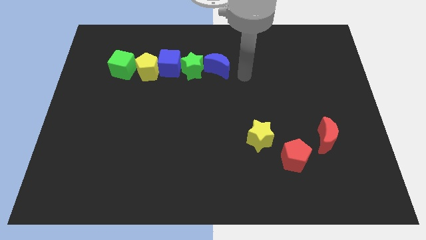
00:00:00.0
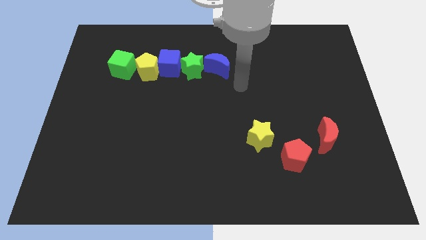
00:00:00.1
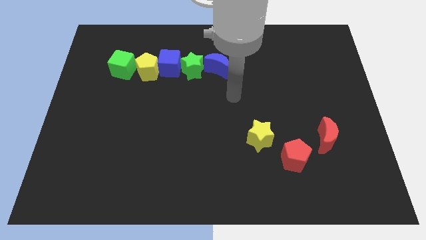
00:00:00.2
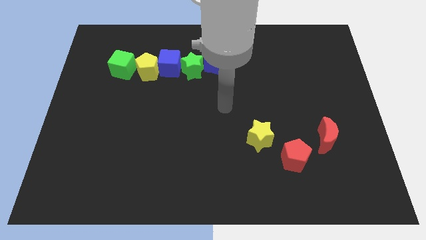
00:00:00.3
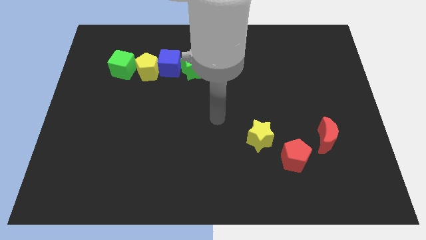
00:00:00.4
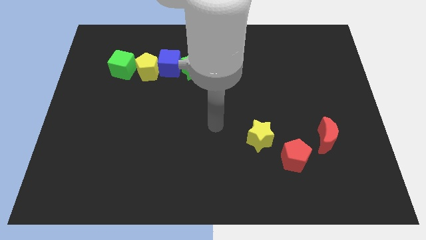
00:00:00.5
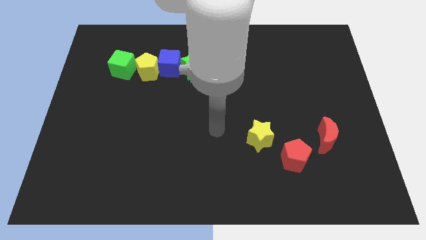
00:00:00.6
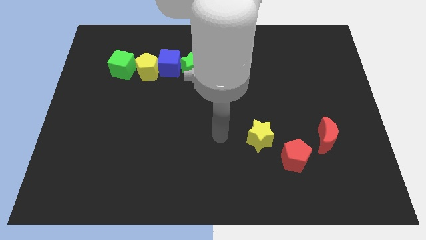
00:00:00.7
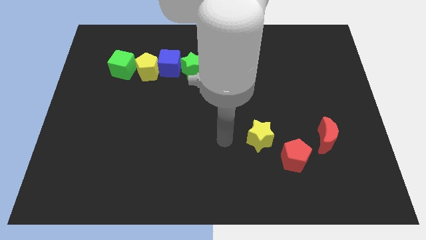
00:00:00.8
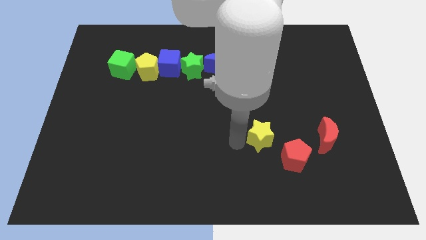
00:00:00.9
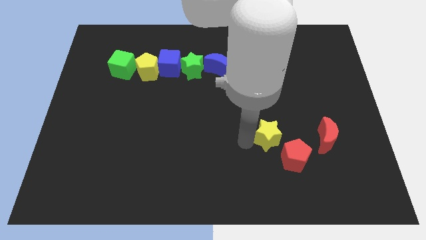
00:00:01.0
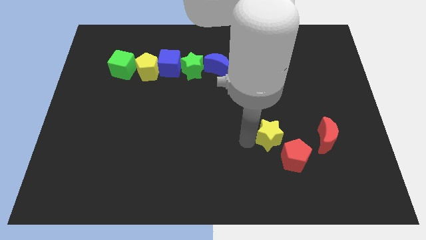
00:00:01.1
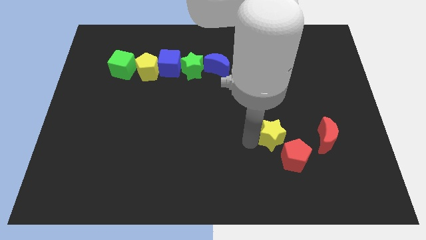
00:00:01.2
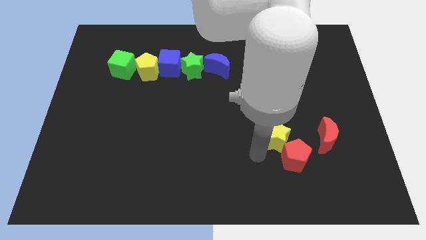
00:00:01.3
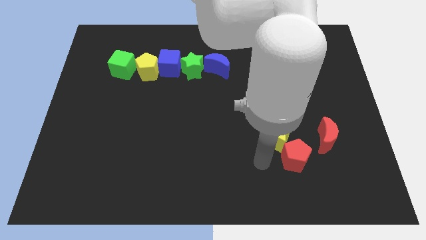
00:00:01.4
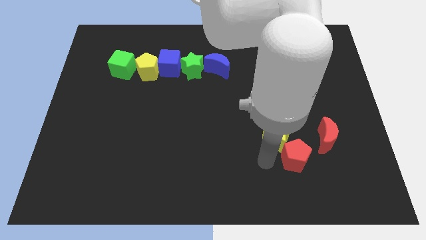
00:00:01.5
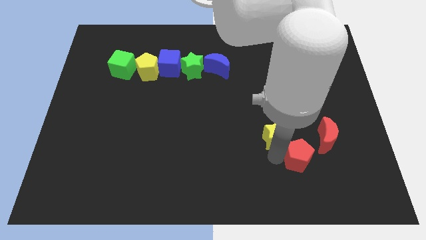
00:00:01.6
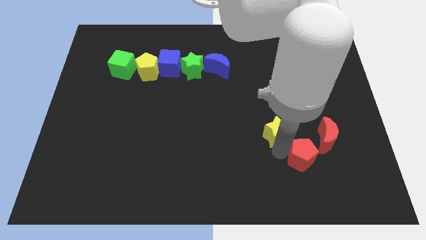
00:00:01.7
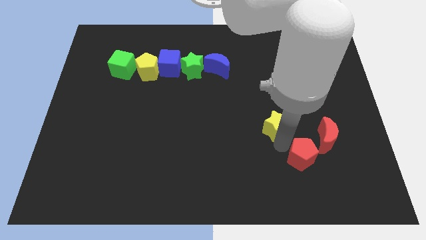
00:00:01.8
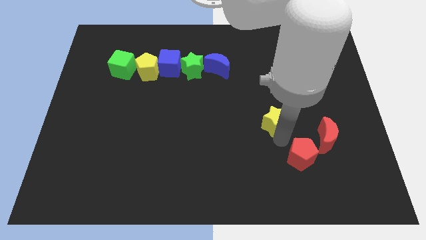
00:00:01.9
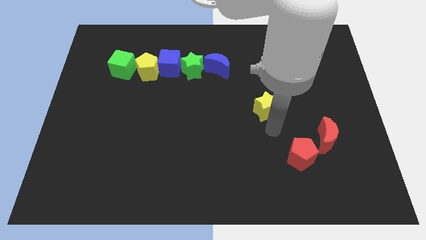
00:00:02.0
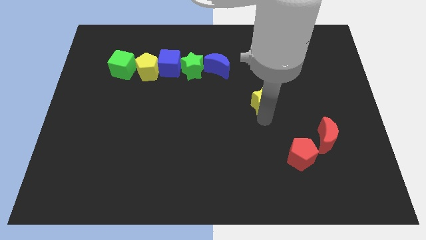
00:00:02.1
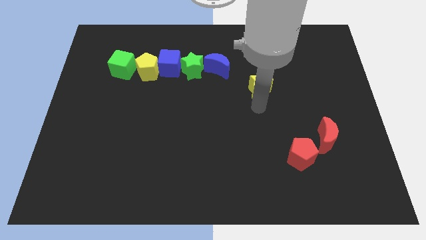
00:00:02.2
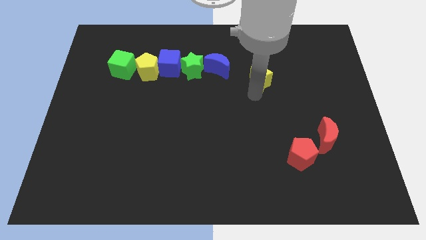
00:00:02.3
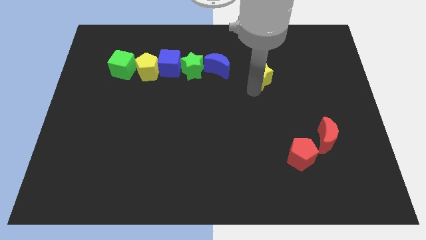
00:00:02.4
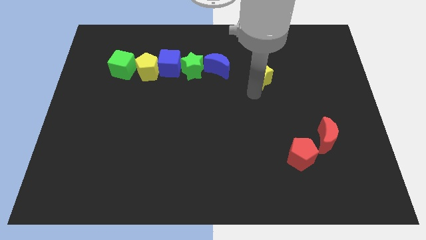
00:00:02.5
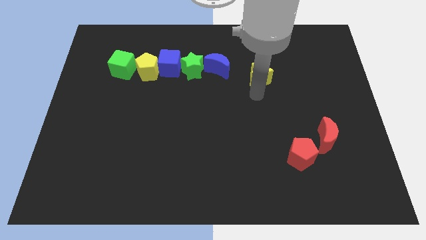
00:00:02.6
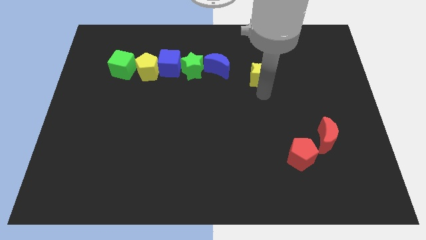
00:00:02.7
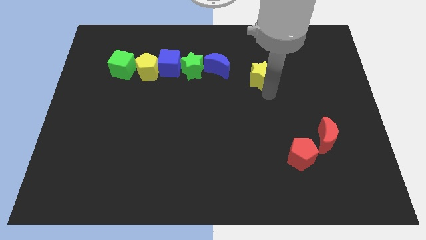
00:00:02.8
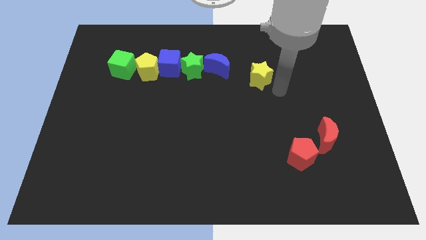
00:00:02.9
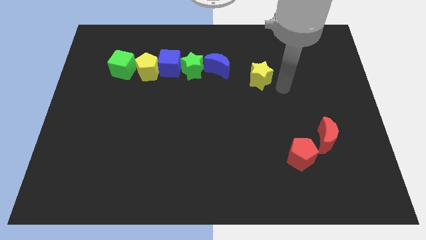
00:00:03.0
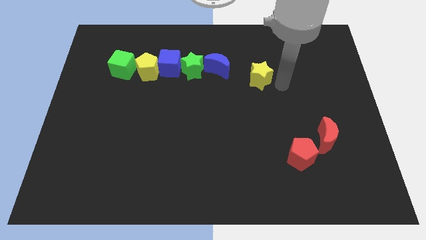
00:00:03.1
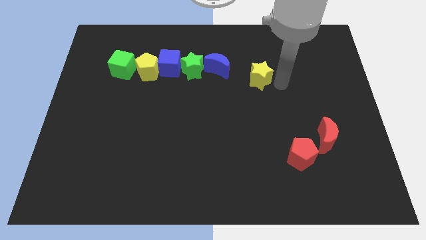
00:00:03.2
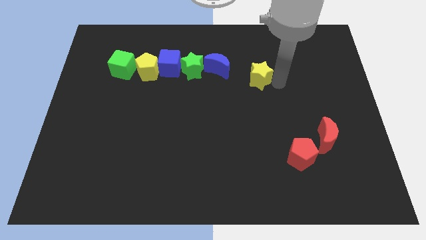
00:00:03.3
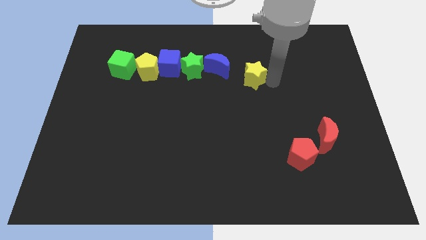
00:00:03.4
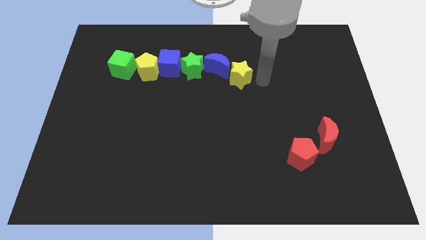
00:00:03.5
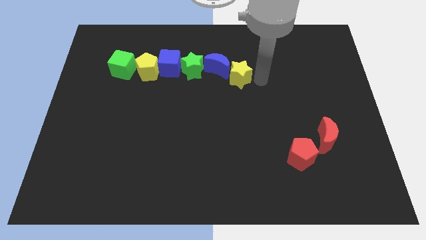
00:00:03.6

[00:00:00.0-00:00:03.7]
push the yellow star away from the red pentagon

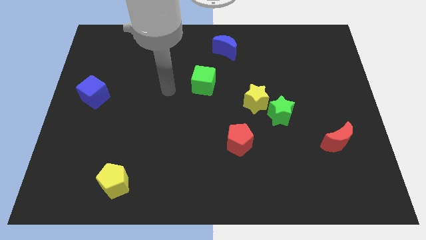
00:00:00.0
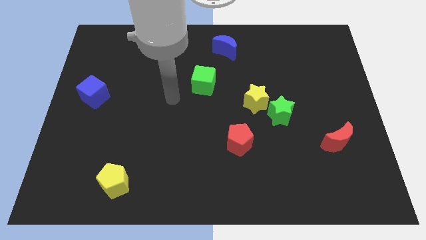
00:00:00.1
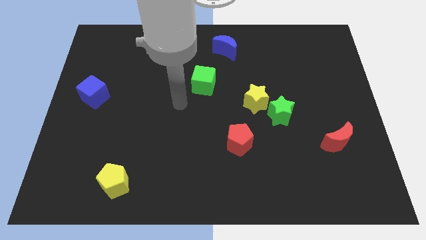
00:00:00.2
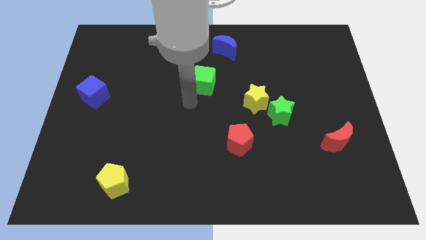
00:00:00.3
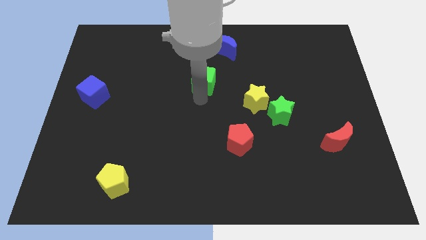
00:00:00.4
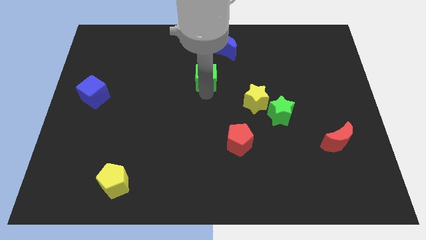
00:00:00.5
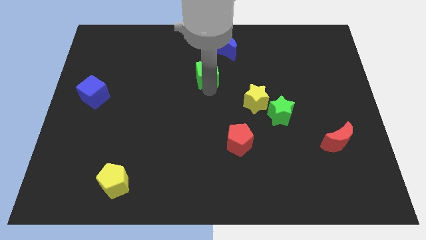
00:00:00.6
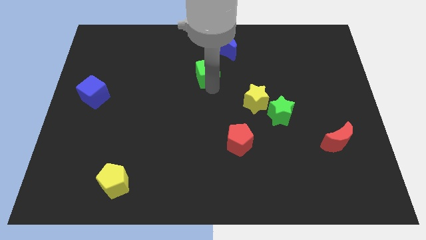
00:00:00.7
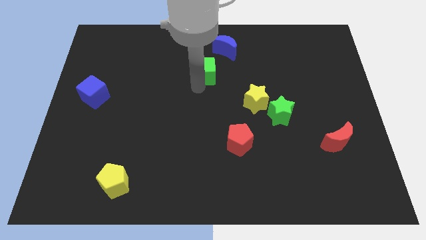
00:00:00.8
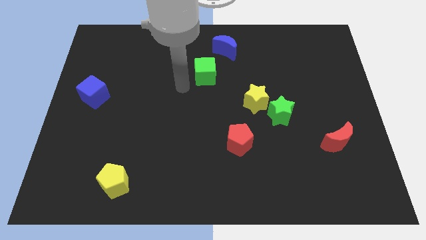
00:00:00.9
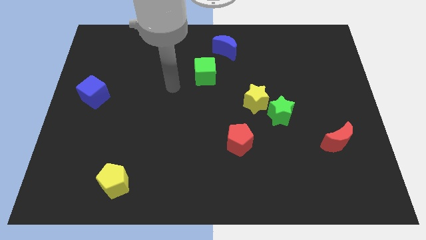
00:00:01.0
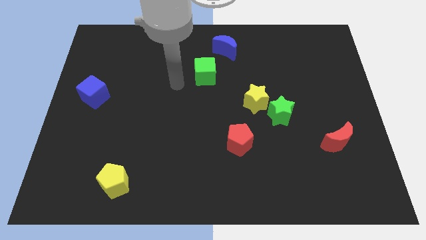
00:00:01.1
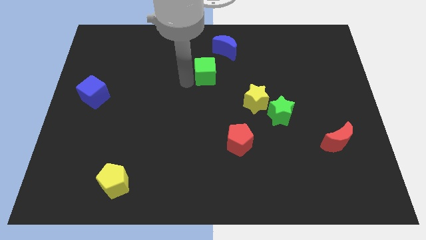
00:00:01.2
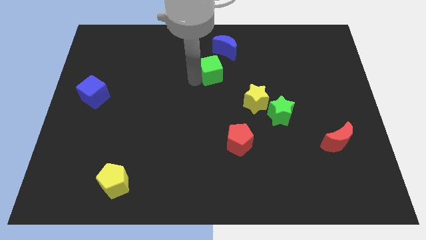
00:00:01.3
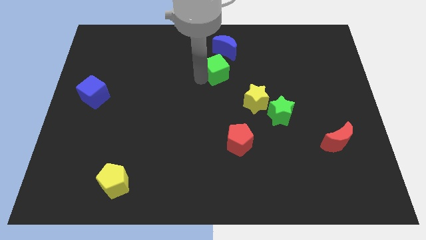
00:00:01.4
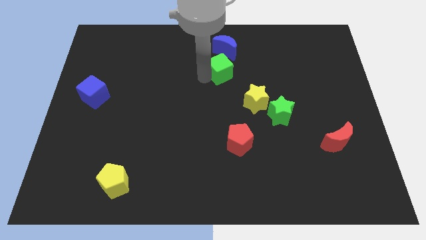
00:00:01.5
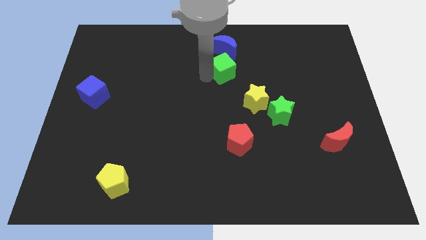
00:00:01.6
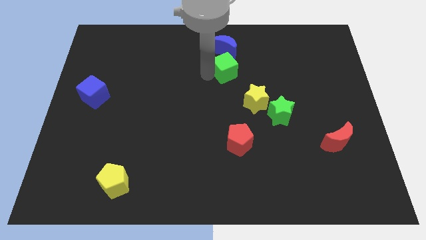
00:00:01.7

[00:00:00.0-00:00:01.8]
slide the green cube to the bottom side of the blue crescent

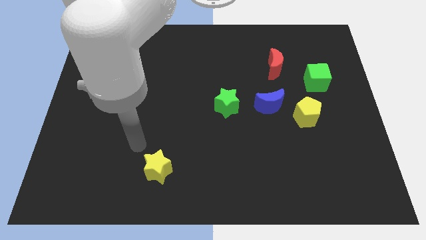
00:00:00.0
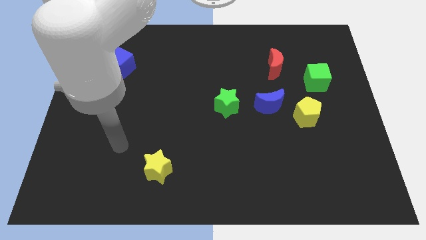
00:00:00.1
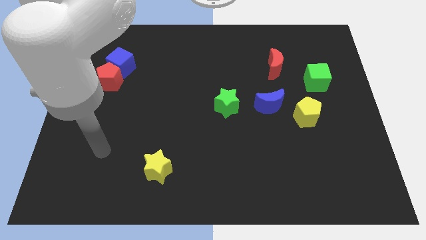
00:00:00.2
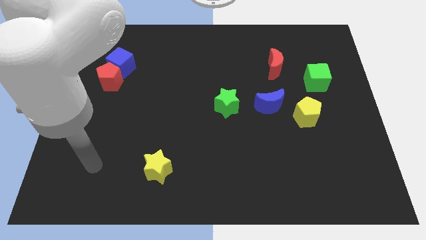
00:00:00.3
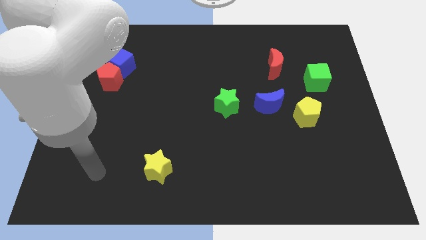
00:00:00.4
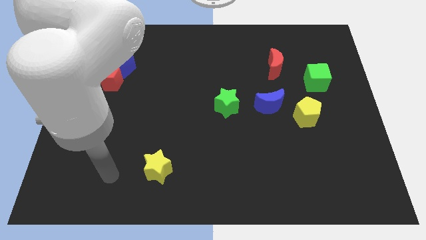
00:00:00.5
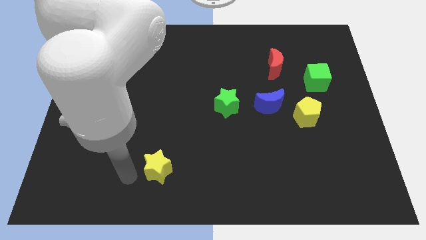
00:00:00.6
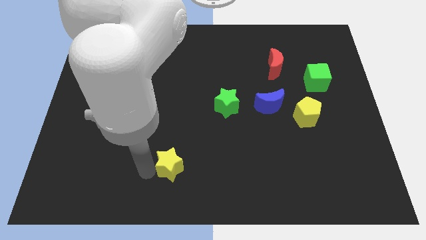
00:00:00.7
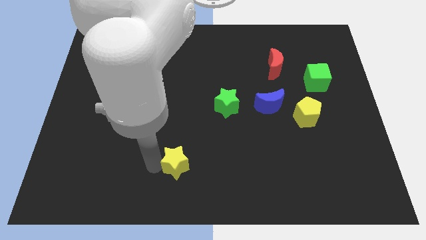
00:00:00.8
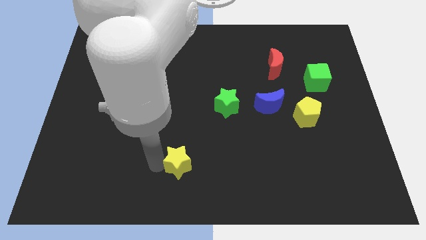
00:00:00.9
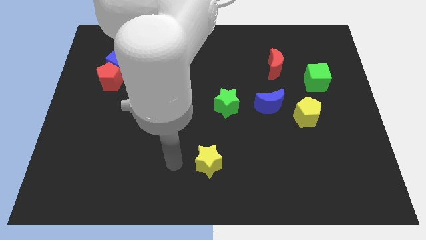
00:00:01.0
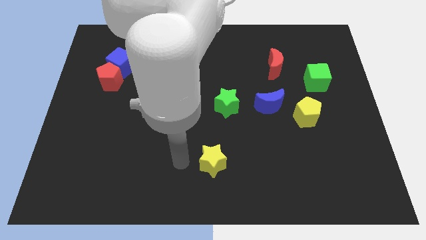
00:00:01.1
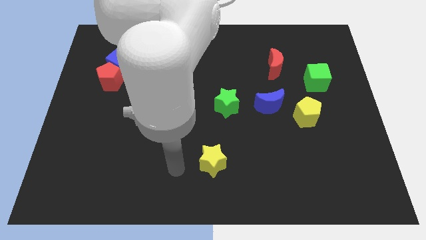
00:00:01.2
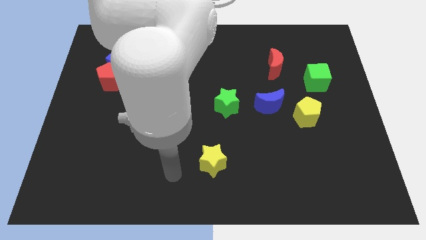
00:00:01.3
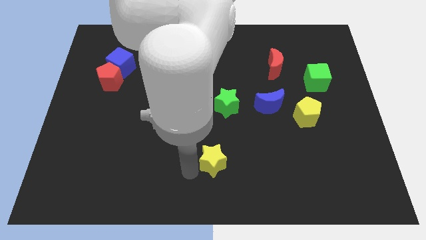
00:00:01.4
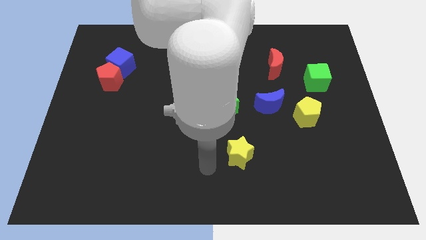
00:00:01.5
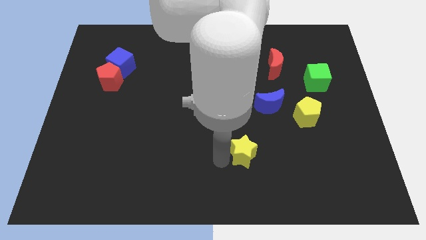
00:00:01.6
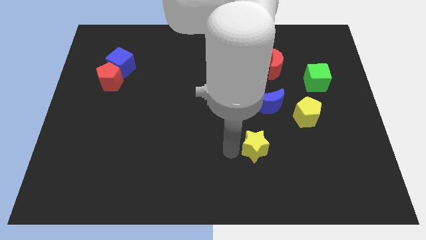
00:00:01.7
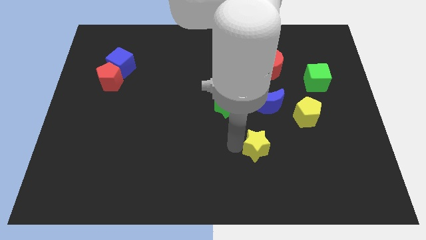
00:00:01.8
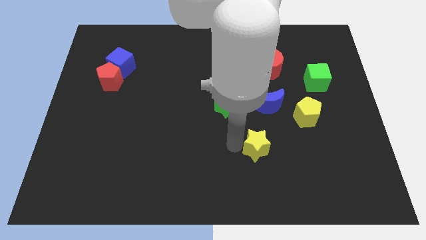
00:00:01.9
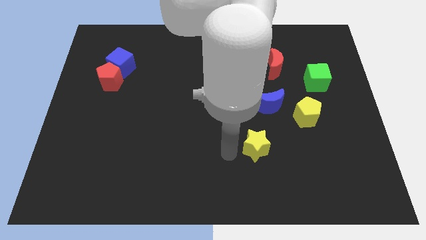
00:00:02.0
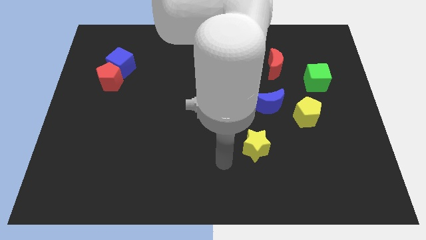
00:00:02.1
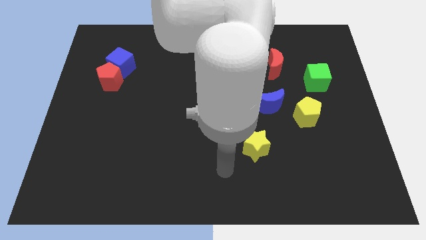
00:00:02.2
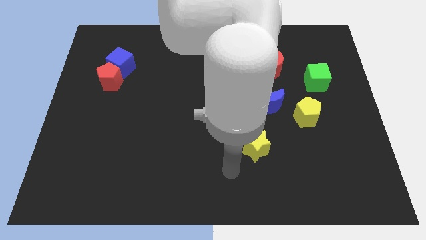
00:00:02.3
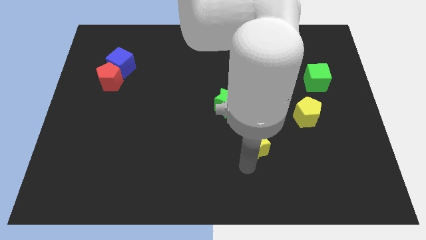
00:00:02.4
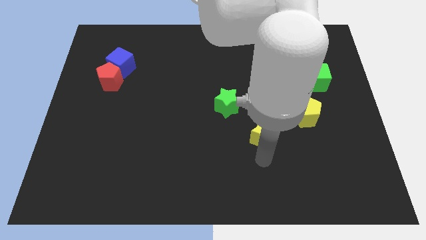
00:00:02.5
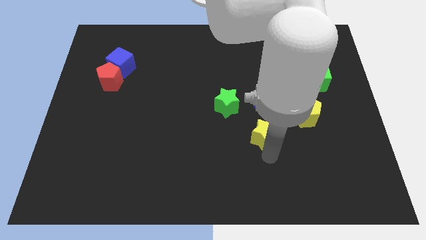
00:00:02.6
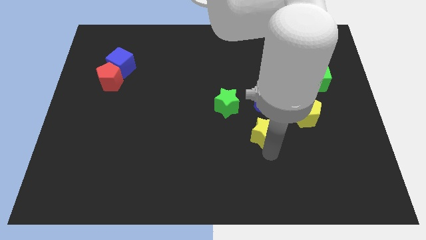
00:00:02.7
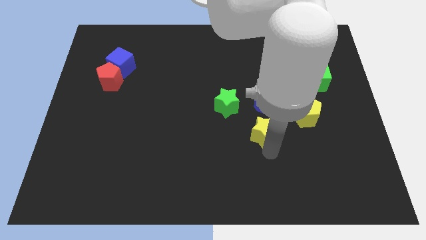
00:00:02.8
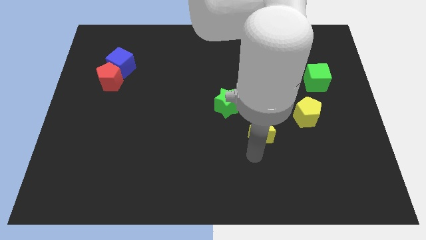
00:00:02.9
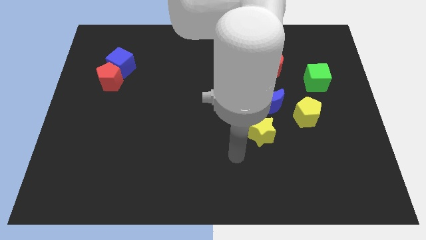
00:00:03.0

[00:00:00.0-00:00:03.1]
push yellow star below blue crescent

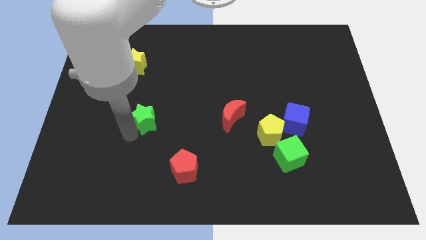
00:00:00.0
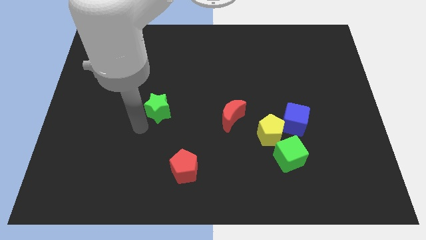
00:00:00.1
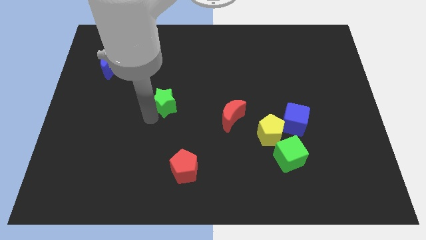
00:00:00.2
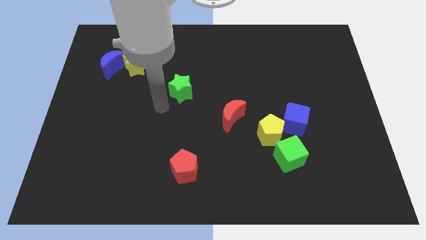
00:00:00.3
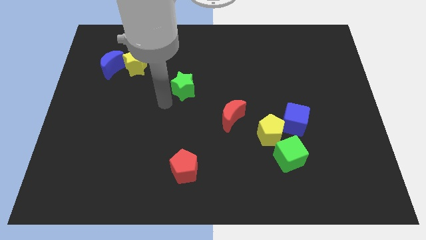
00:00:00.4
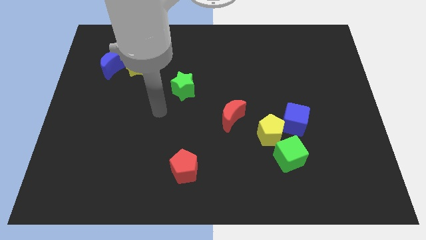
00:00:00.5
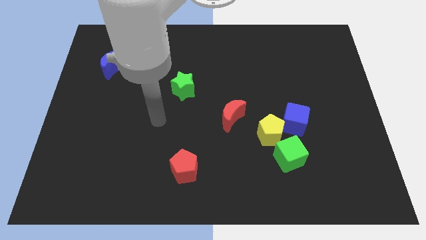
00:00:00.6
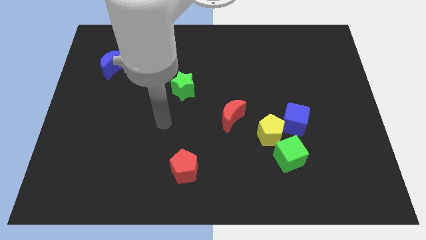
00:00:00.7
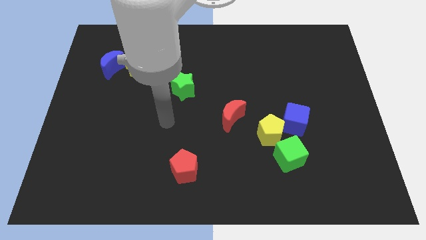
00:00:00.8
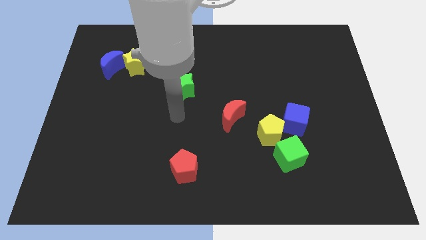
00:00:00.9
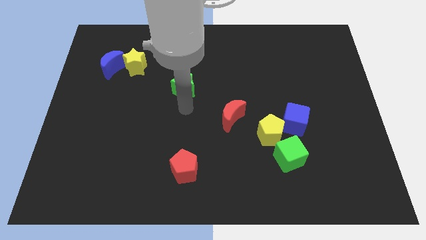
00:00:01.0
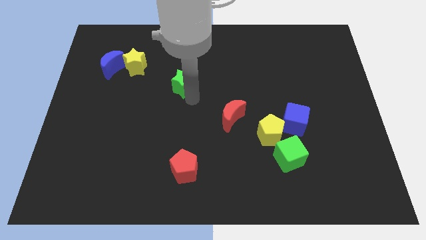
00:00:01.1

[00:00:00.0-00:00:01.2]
place the green star between the yellow star and the red crescent
